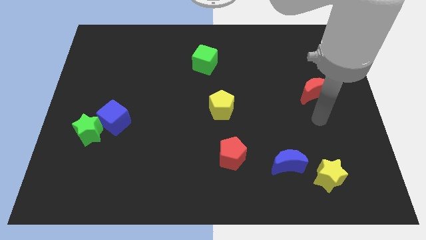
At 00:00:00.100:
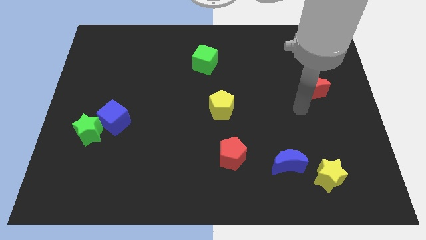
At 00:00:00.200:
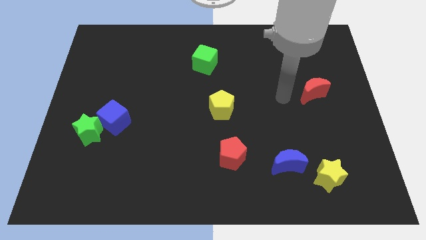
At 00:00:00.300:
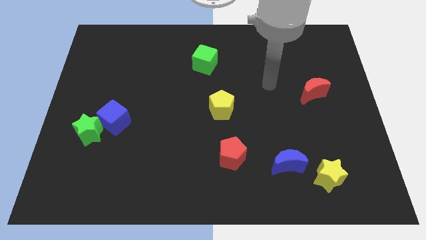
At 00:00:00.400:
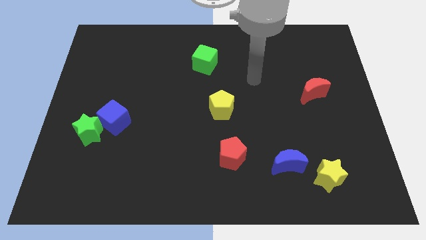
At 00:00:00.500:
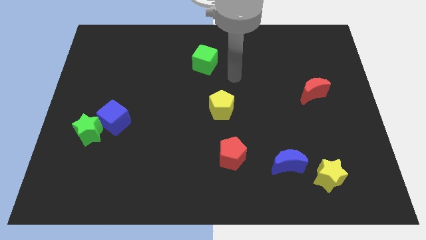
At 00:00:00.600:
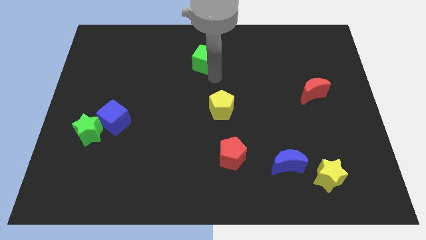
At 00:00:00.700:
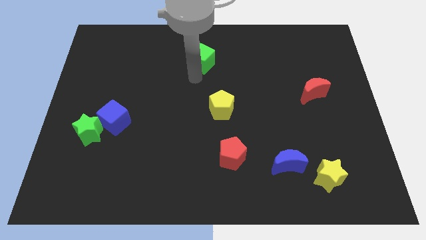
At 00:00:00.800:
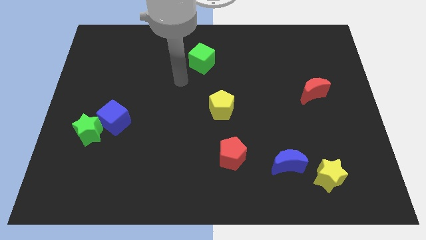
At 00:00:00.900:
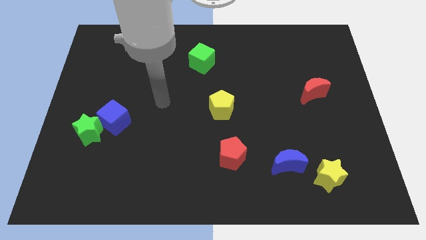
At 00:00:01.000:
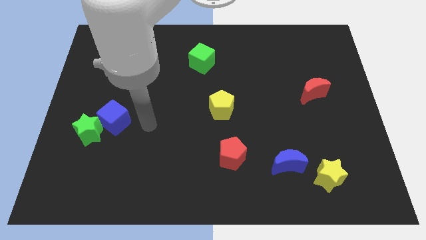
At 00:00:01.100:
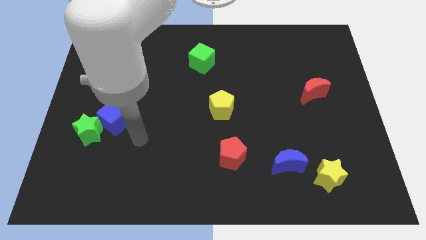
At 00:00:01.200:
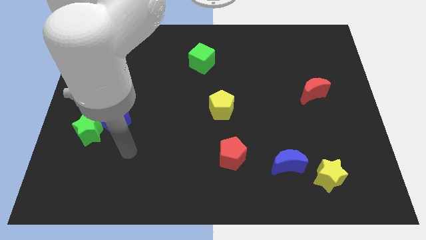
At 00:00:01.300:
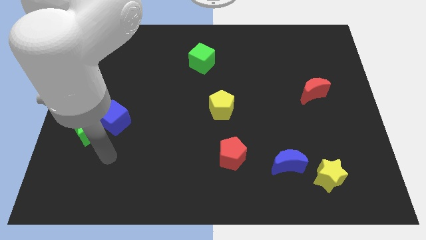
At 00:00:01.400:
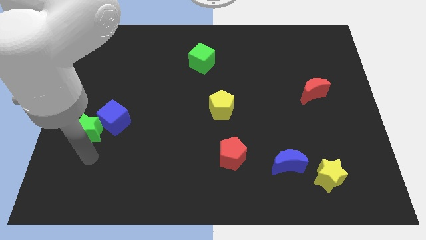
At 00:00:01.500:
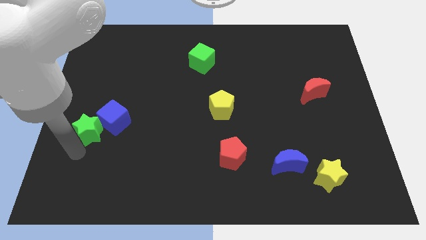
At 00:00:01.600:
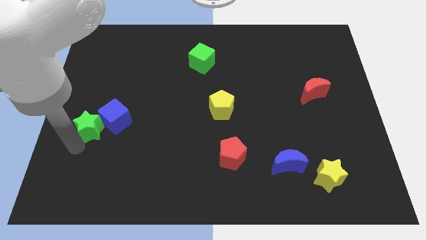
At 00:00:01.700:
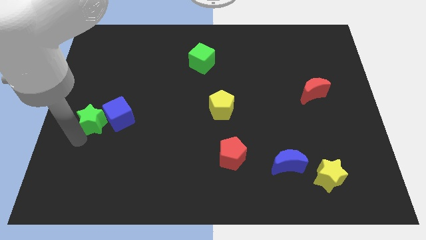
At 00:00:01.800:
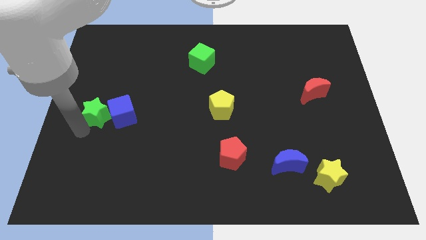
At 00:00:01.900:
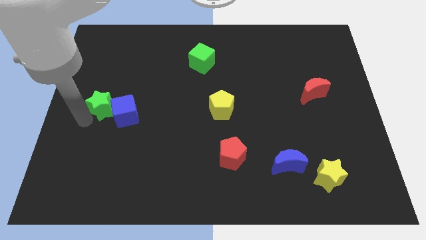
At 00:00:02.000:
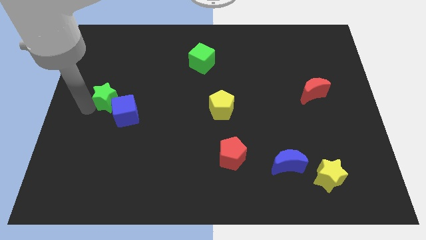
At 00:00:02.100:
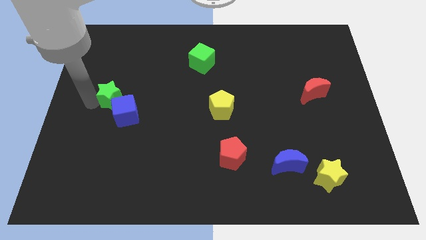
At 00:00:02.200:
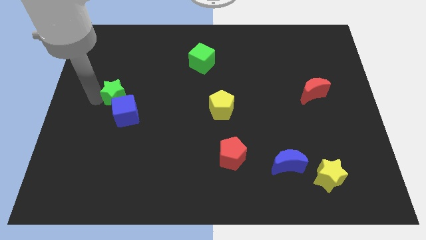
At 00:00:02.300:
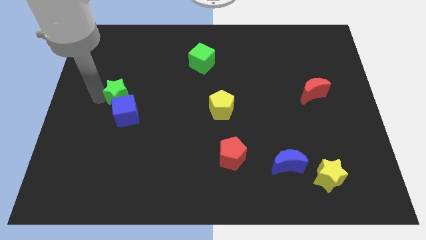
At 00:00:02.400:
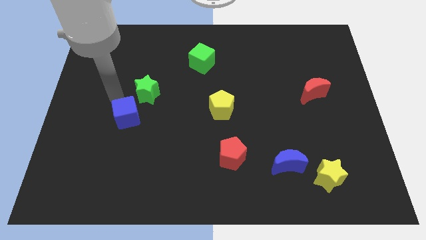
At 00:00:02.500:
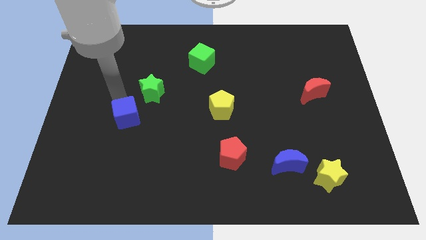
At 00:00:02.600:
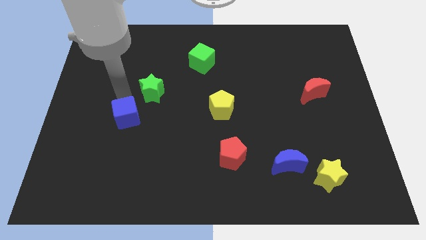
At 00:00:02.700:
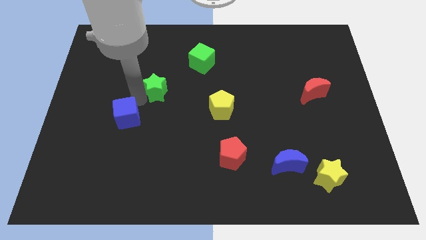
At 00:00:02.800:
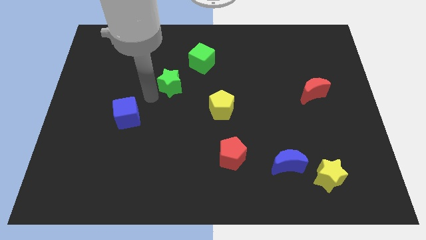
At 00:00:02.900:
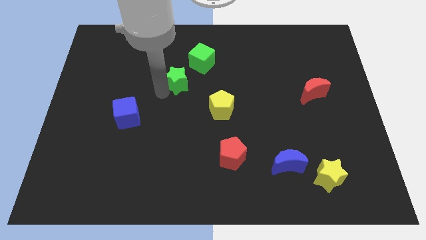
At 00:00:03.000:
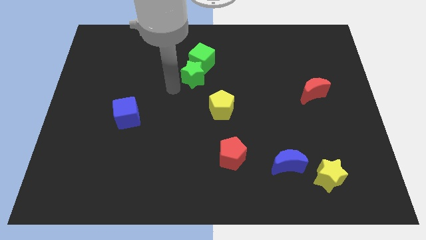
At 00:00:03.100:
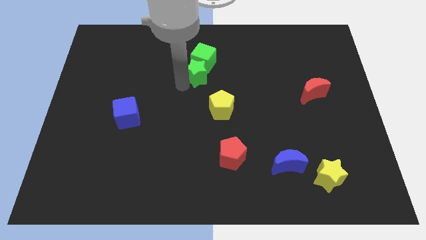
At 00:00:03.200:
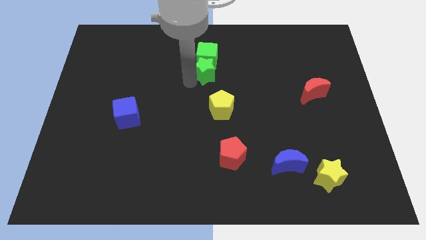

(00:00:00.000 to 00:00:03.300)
slide the green star to the green cube

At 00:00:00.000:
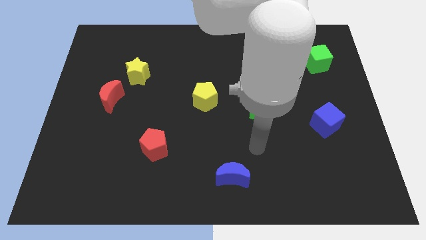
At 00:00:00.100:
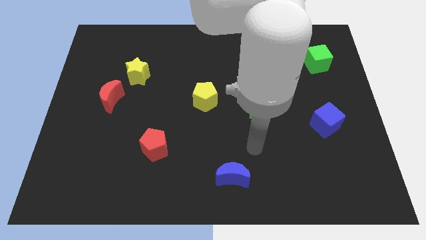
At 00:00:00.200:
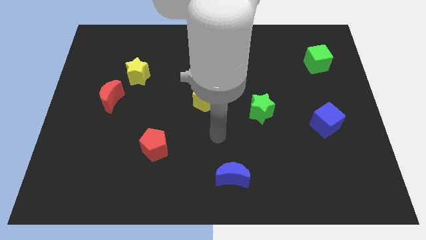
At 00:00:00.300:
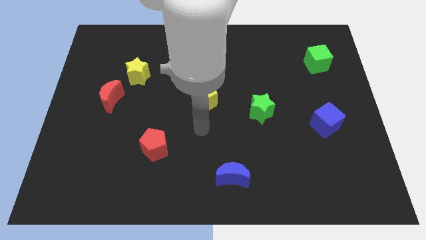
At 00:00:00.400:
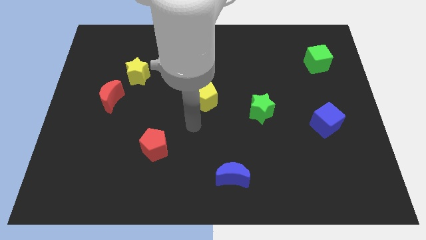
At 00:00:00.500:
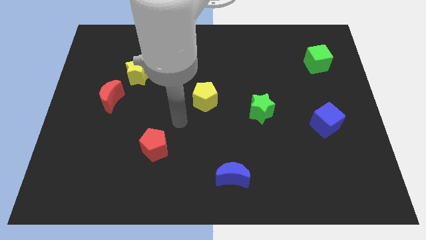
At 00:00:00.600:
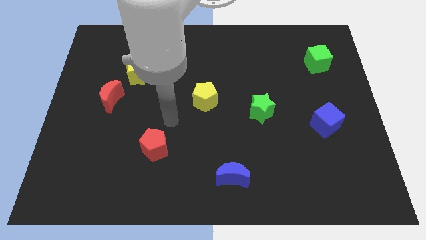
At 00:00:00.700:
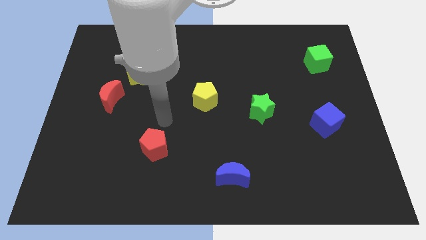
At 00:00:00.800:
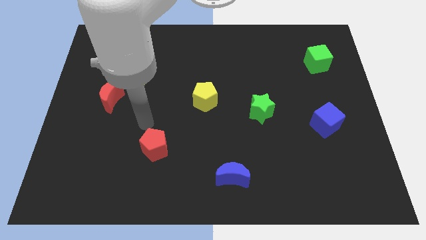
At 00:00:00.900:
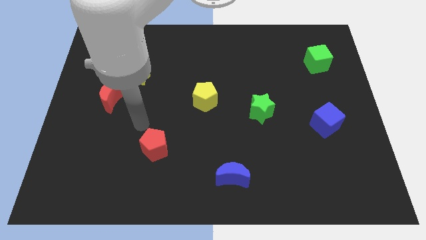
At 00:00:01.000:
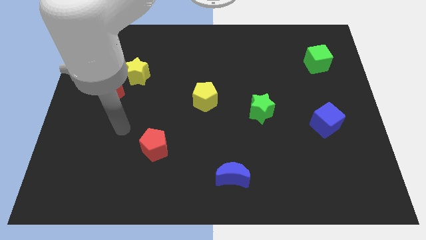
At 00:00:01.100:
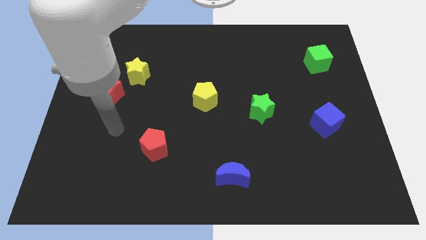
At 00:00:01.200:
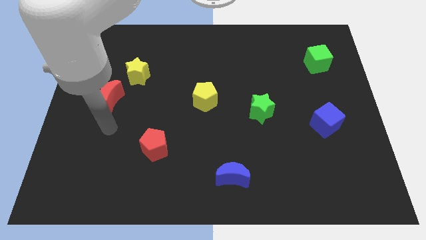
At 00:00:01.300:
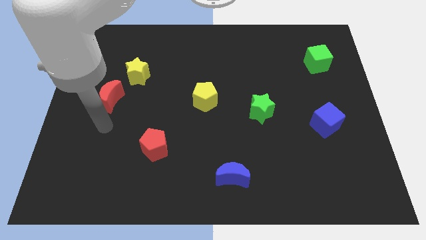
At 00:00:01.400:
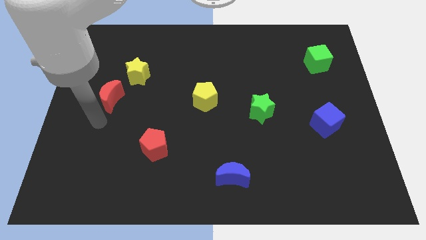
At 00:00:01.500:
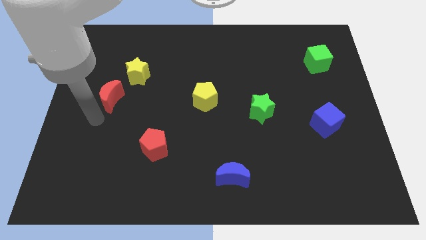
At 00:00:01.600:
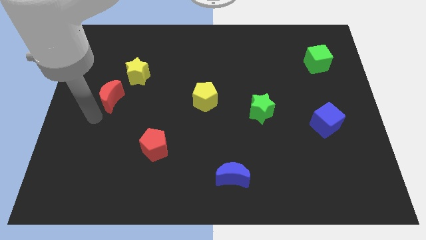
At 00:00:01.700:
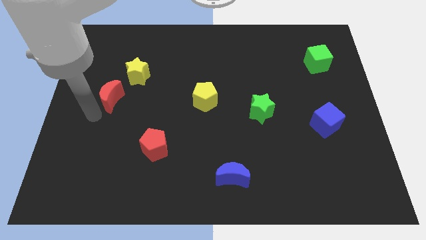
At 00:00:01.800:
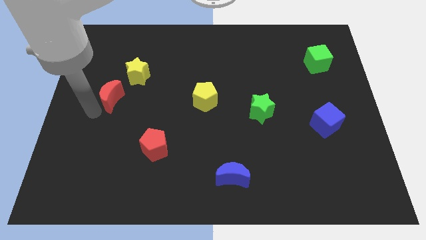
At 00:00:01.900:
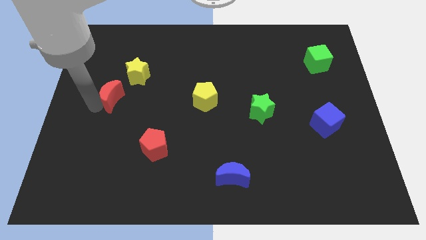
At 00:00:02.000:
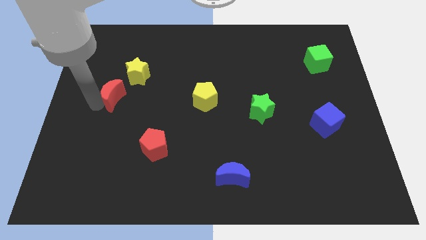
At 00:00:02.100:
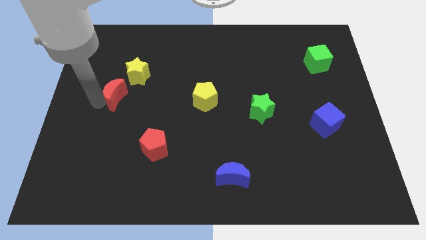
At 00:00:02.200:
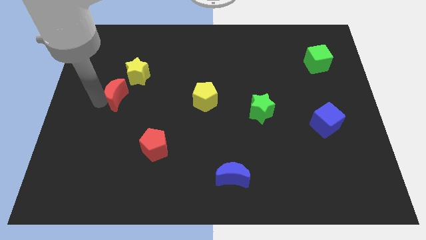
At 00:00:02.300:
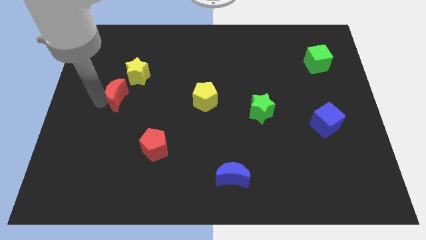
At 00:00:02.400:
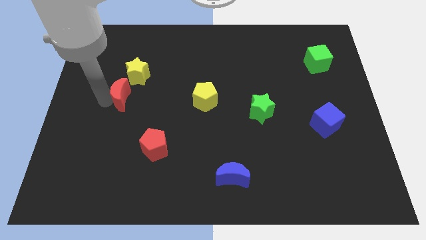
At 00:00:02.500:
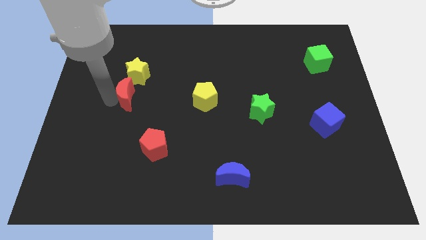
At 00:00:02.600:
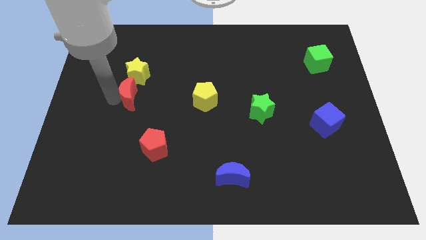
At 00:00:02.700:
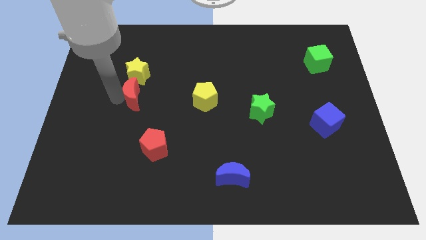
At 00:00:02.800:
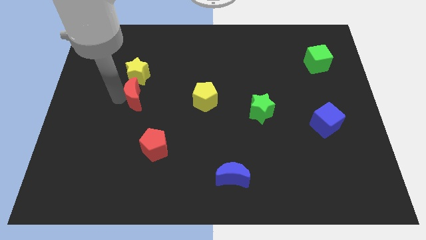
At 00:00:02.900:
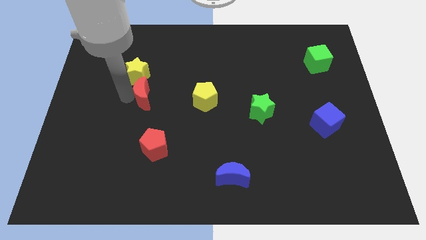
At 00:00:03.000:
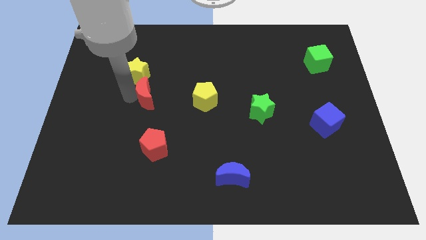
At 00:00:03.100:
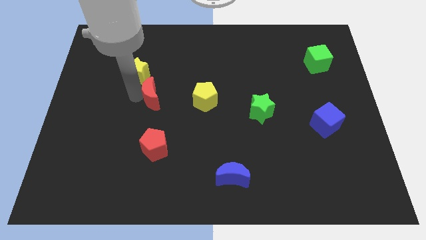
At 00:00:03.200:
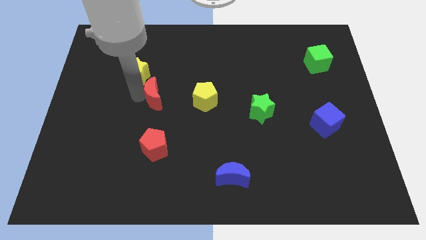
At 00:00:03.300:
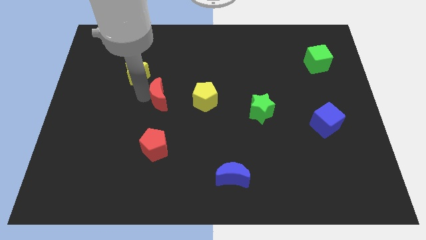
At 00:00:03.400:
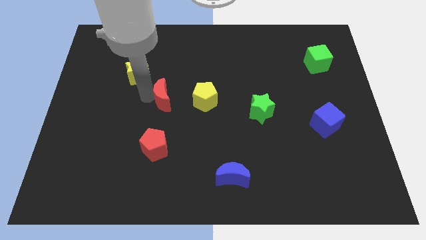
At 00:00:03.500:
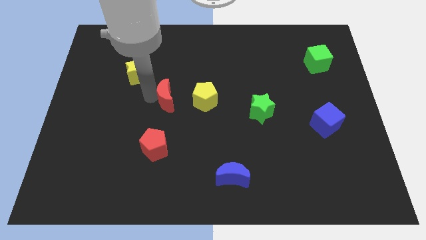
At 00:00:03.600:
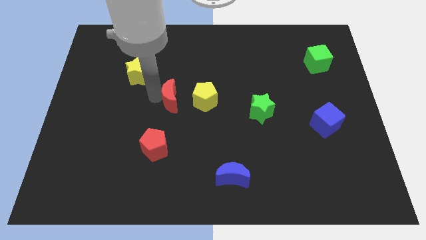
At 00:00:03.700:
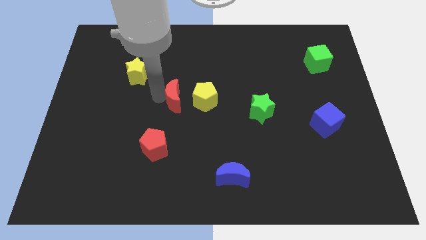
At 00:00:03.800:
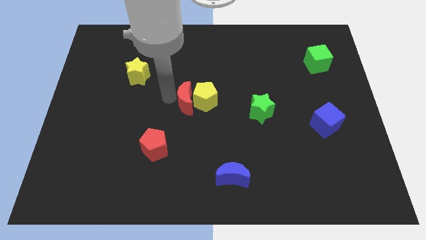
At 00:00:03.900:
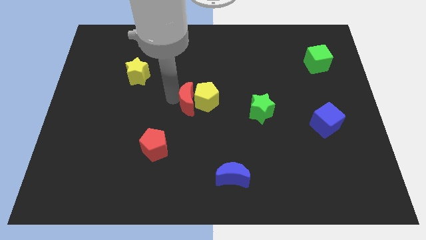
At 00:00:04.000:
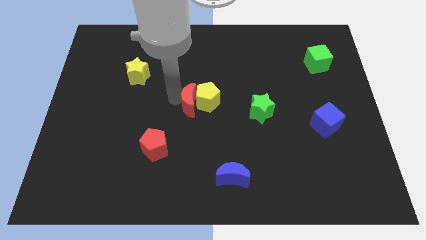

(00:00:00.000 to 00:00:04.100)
slide the red moon to the yellow pentagon

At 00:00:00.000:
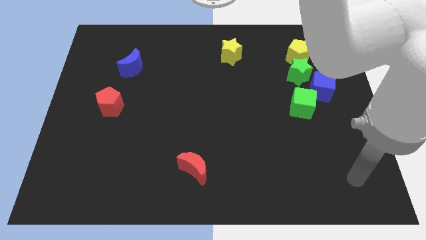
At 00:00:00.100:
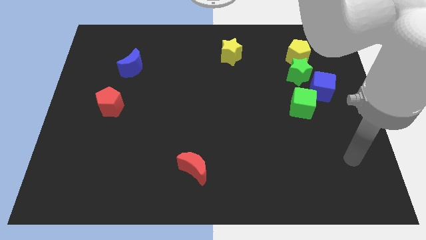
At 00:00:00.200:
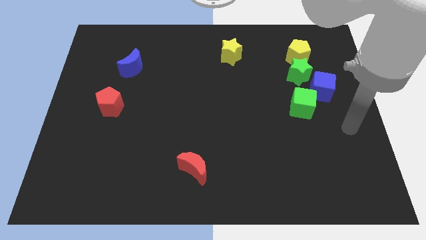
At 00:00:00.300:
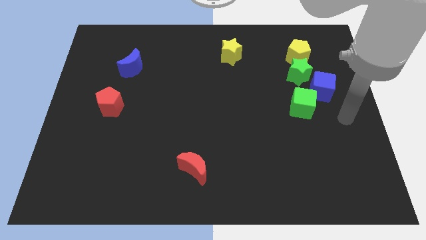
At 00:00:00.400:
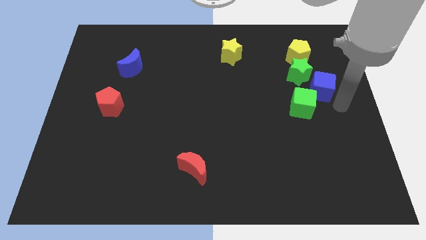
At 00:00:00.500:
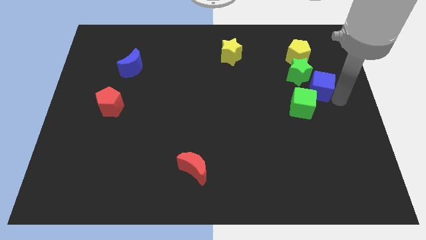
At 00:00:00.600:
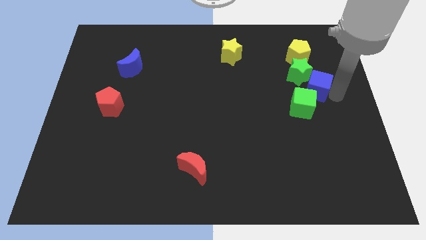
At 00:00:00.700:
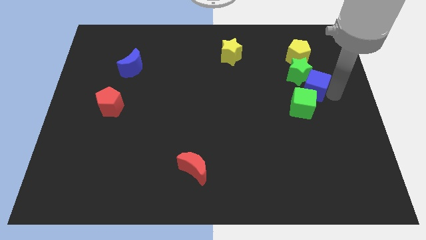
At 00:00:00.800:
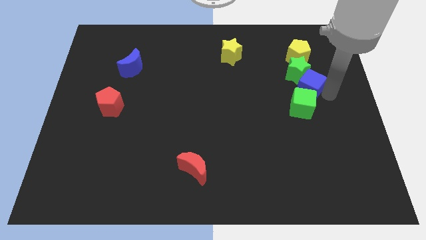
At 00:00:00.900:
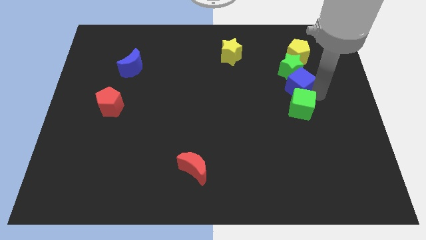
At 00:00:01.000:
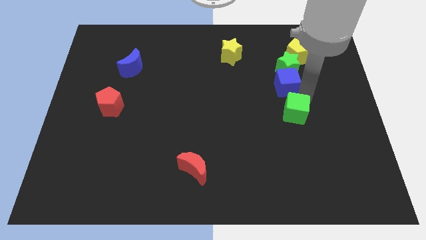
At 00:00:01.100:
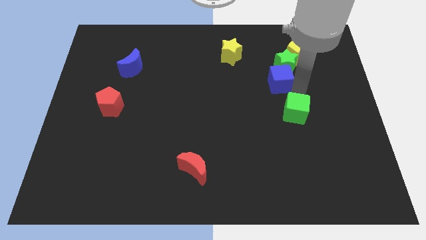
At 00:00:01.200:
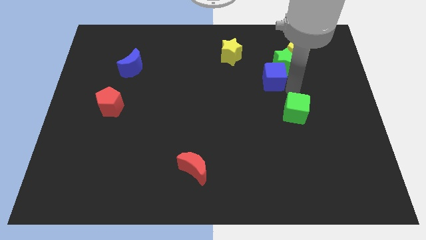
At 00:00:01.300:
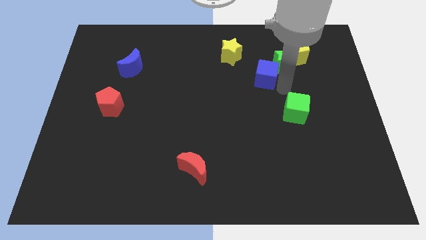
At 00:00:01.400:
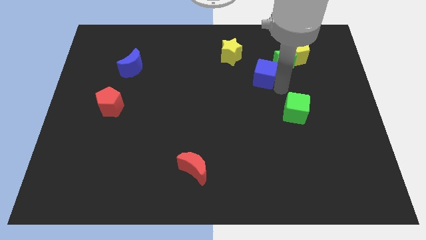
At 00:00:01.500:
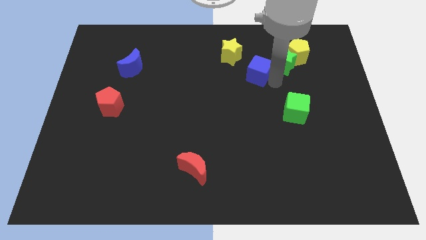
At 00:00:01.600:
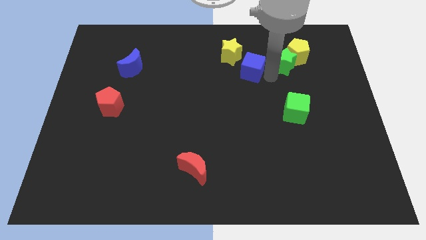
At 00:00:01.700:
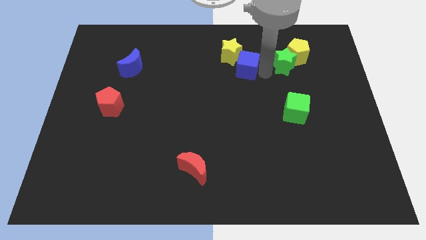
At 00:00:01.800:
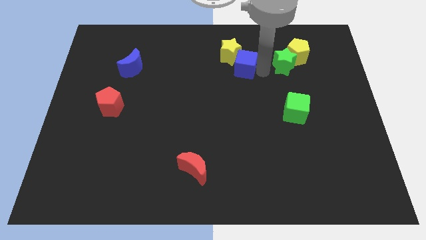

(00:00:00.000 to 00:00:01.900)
move the blue cube towards the yellow star
